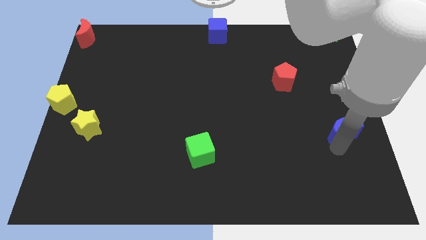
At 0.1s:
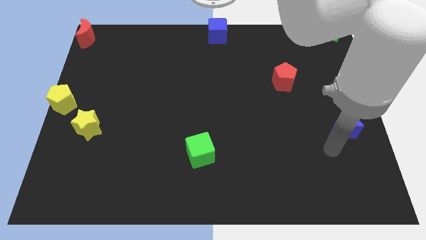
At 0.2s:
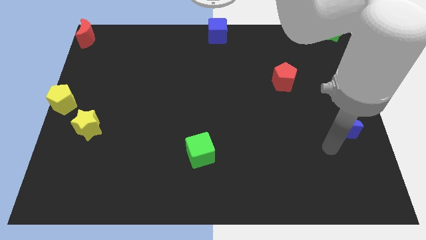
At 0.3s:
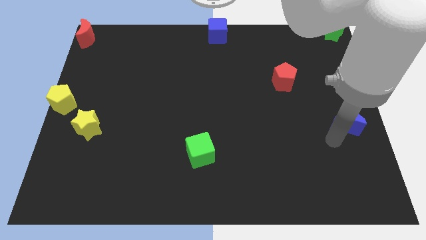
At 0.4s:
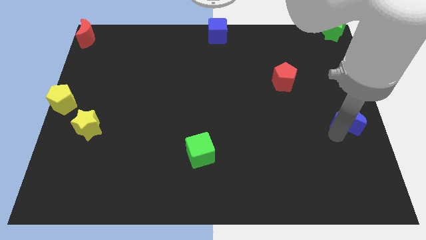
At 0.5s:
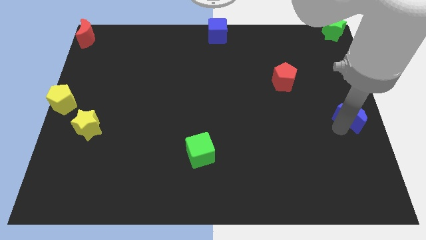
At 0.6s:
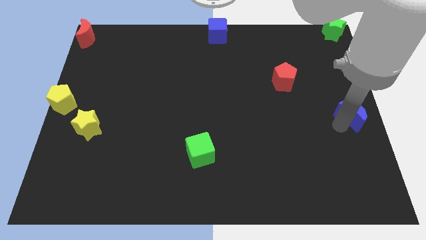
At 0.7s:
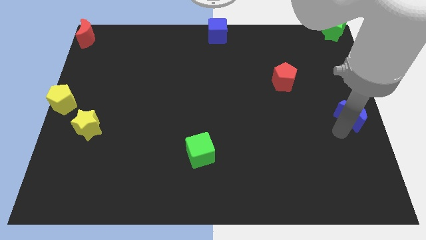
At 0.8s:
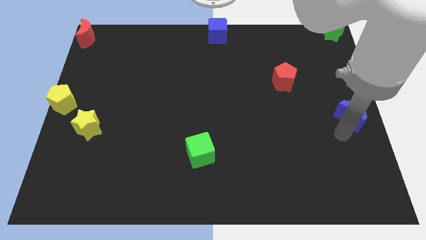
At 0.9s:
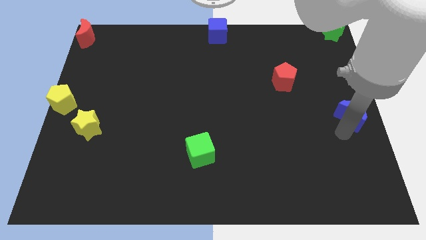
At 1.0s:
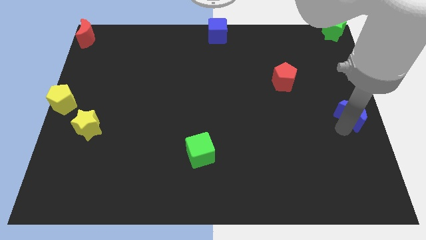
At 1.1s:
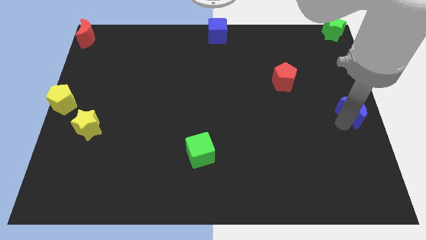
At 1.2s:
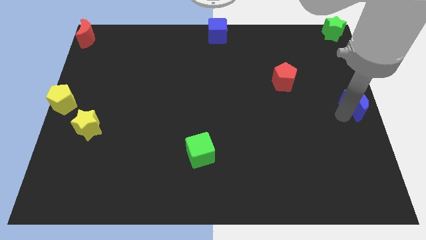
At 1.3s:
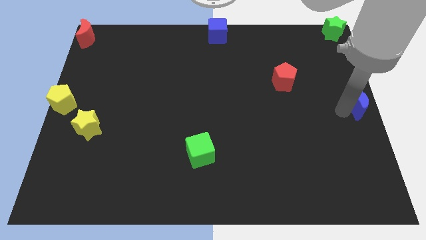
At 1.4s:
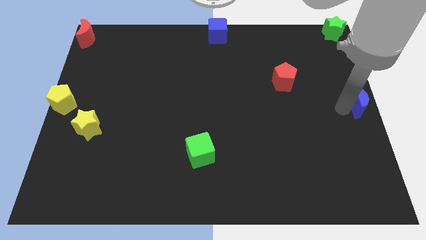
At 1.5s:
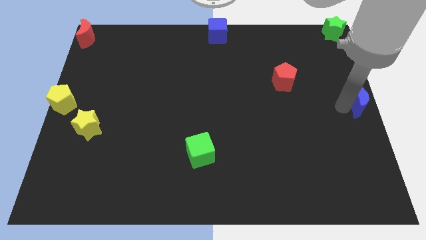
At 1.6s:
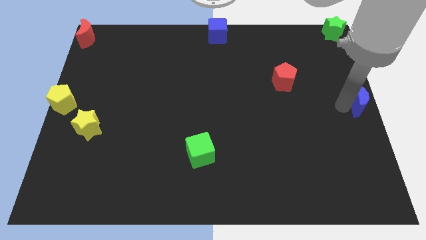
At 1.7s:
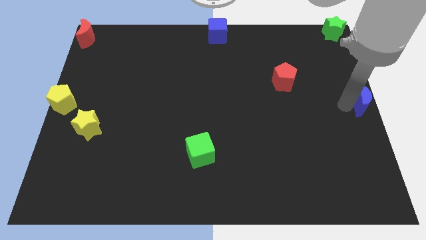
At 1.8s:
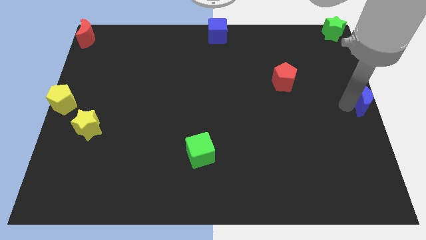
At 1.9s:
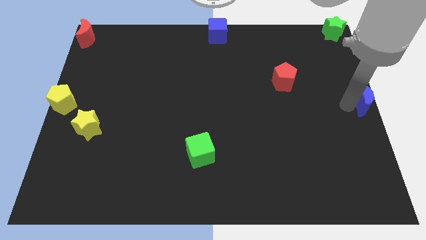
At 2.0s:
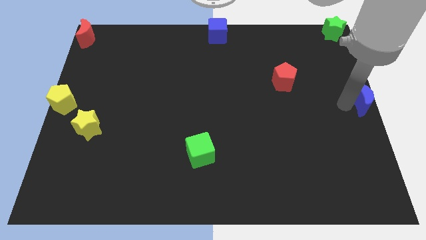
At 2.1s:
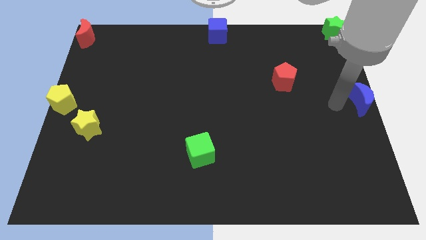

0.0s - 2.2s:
move the blue crescent to the center right side of the board

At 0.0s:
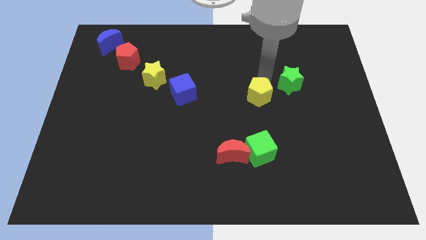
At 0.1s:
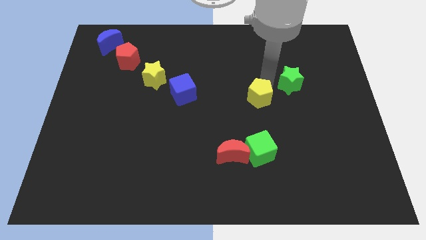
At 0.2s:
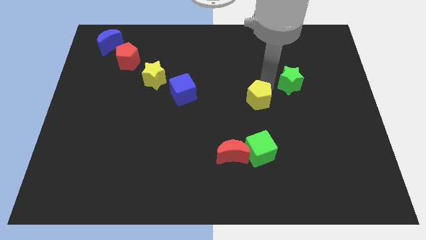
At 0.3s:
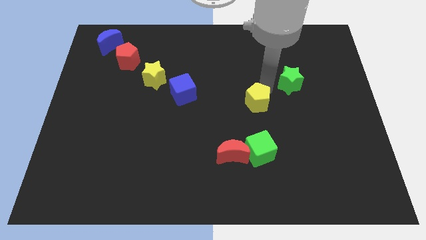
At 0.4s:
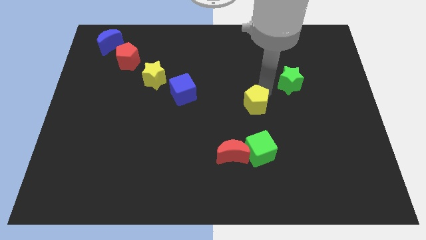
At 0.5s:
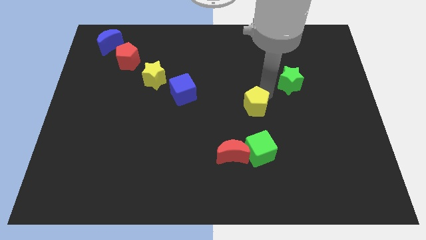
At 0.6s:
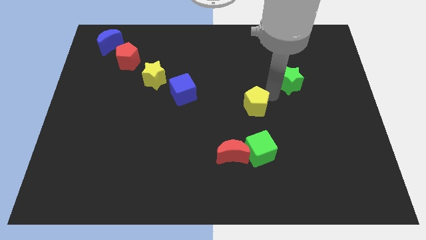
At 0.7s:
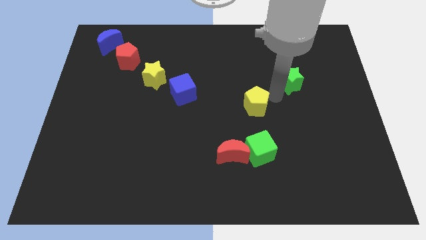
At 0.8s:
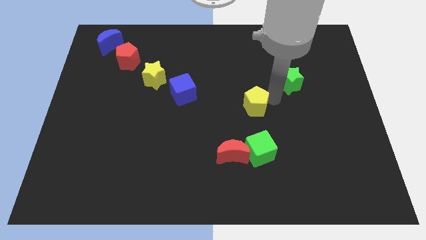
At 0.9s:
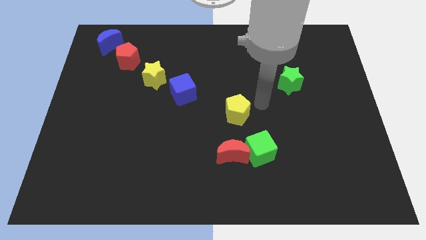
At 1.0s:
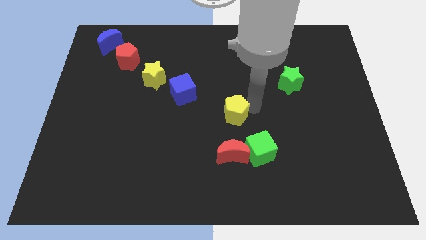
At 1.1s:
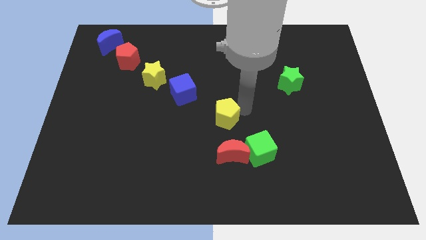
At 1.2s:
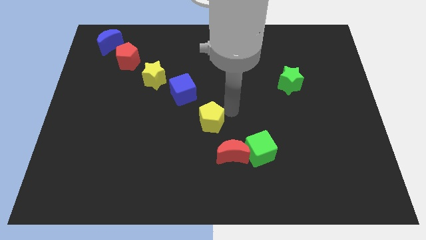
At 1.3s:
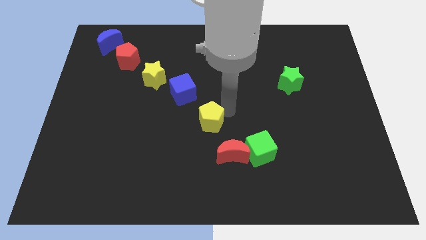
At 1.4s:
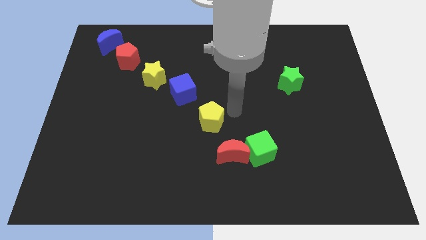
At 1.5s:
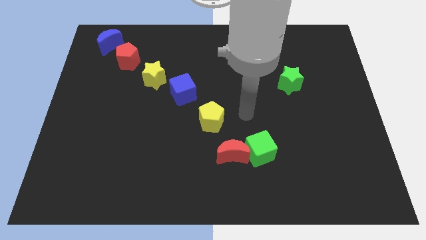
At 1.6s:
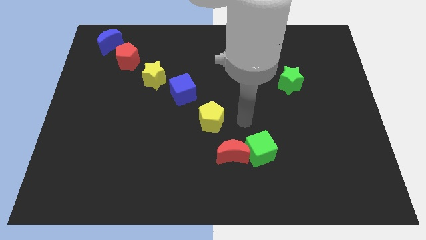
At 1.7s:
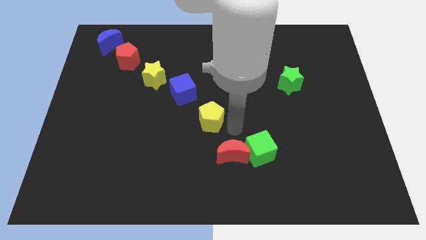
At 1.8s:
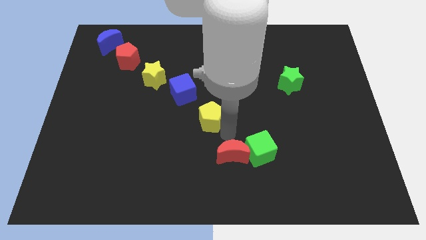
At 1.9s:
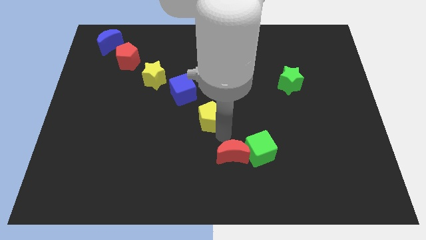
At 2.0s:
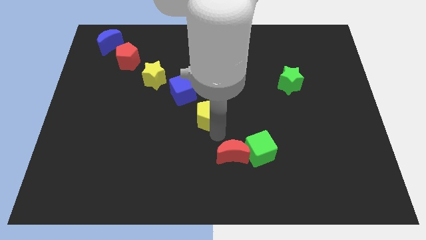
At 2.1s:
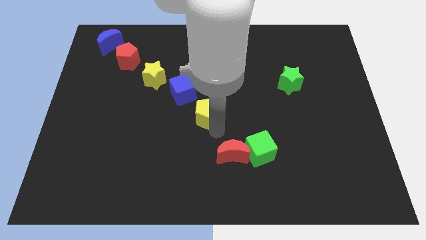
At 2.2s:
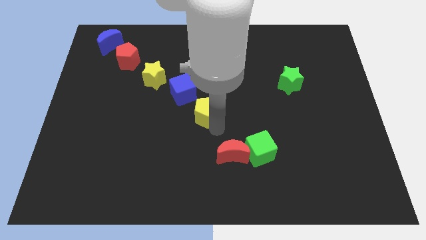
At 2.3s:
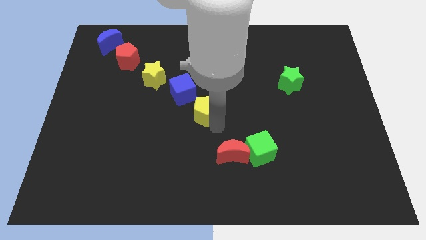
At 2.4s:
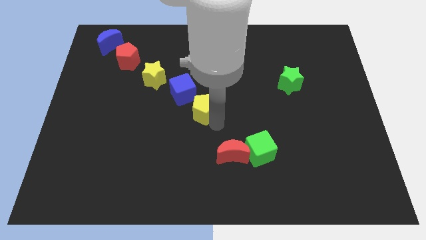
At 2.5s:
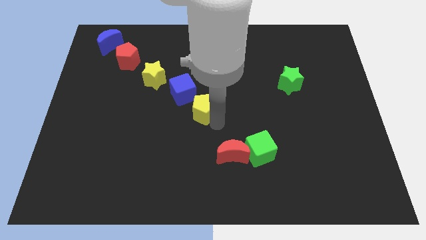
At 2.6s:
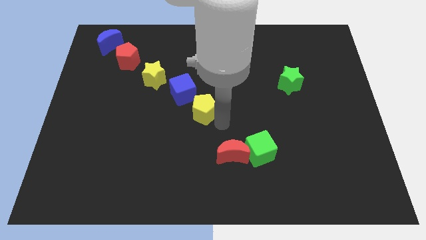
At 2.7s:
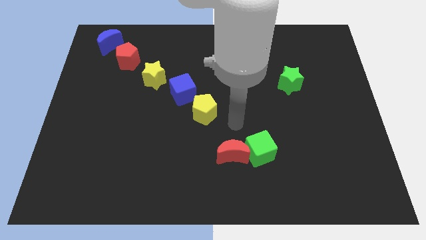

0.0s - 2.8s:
push the yellow pentagon close to the blue cube

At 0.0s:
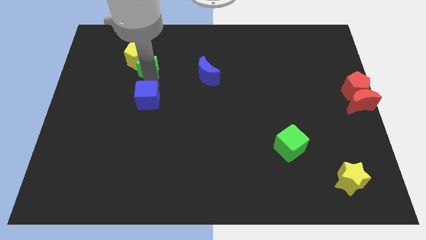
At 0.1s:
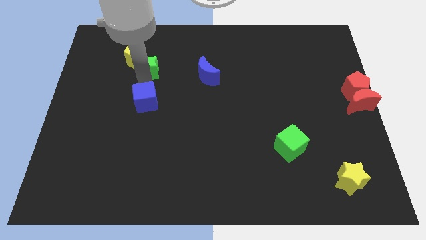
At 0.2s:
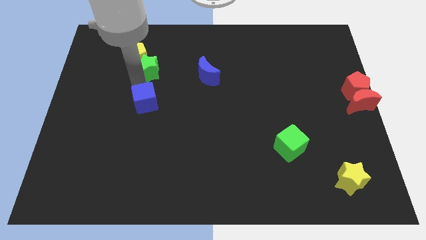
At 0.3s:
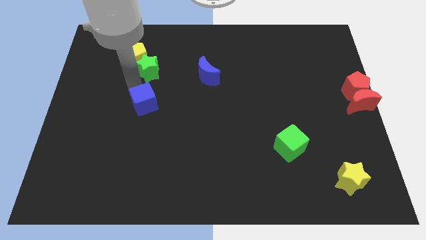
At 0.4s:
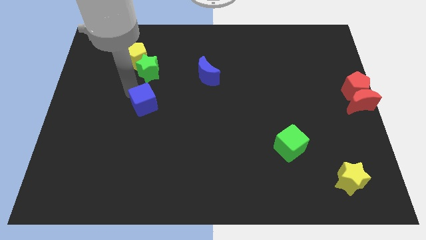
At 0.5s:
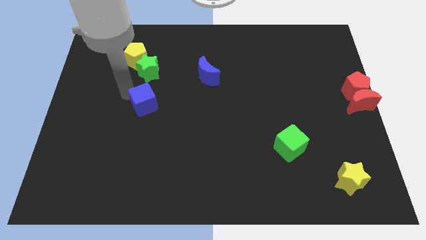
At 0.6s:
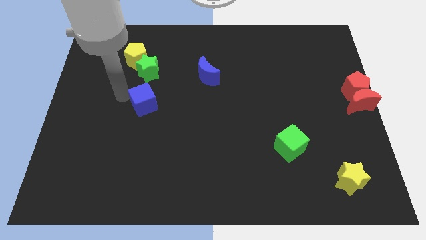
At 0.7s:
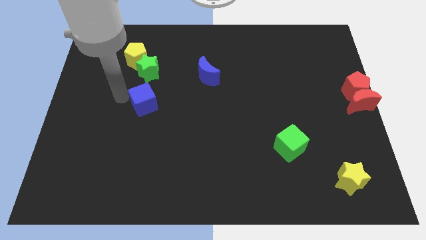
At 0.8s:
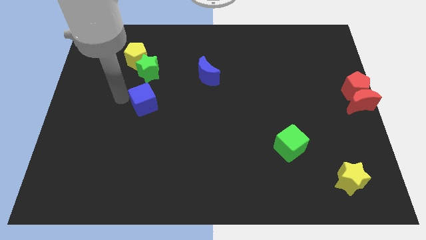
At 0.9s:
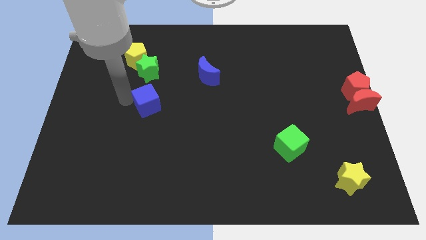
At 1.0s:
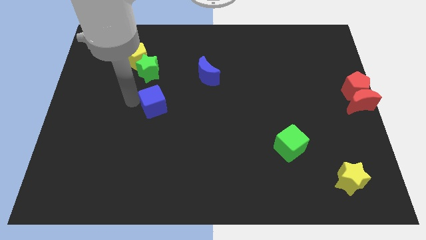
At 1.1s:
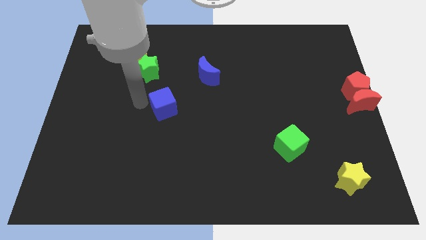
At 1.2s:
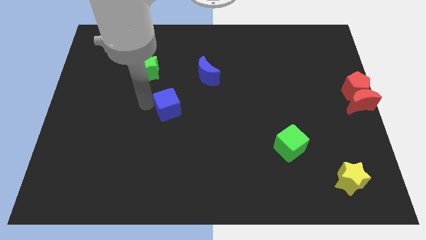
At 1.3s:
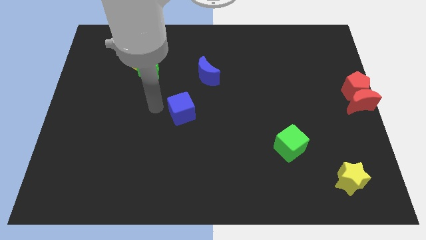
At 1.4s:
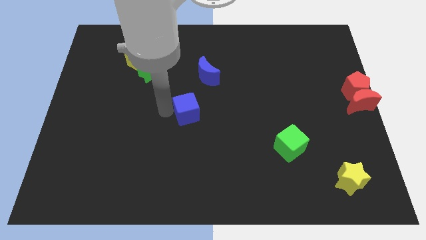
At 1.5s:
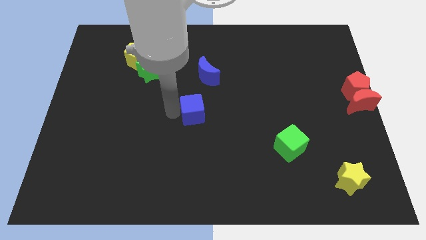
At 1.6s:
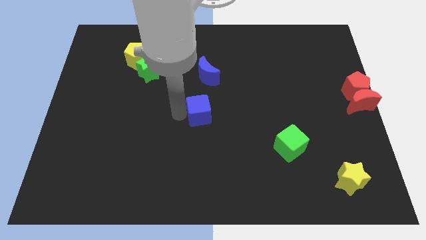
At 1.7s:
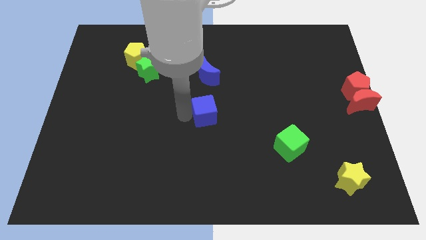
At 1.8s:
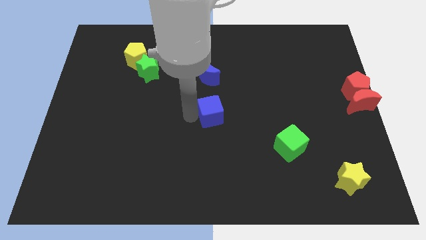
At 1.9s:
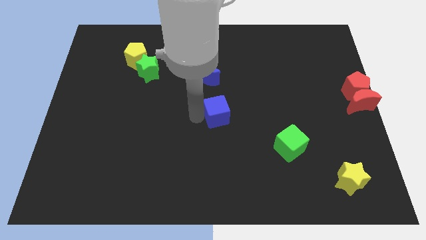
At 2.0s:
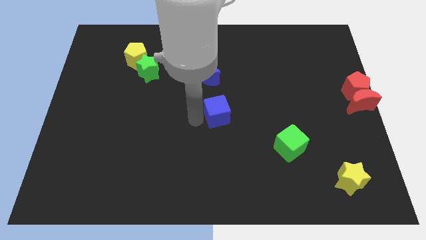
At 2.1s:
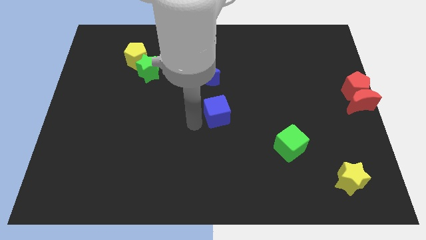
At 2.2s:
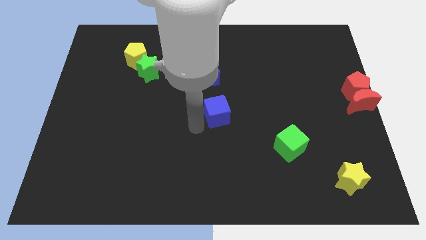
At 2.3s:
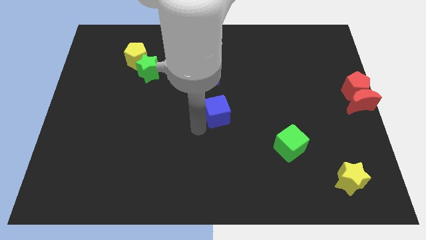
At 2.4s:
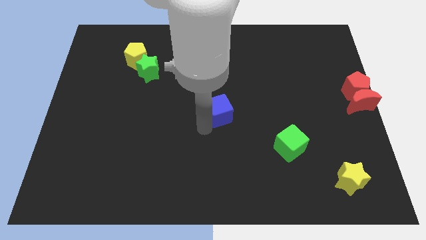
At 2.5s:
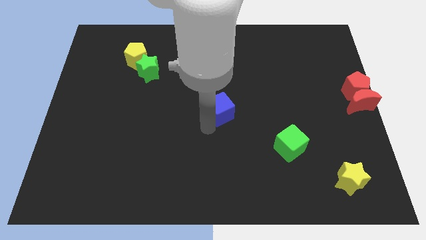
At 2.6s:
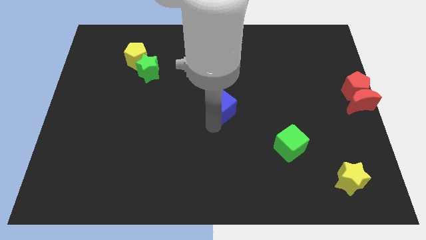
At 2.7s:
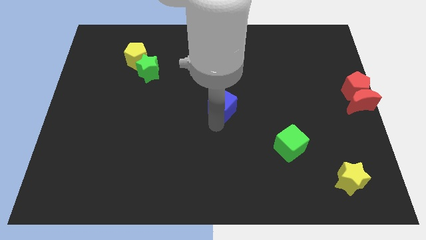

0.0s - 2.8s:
place the blue cube diagonally to green cube

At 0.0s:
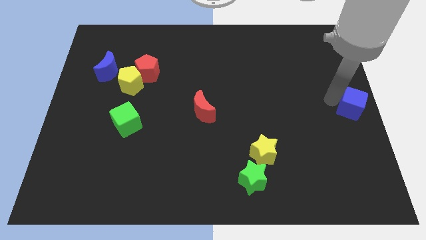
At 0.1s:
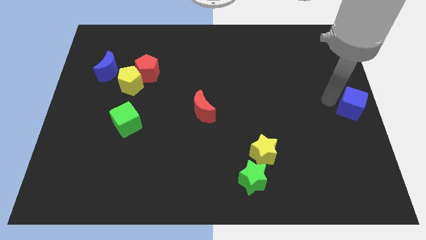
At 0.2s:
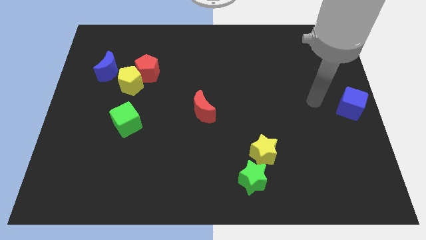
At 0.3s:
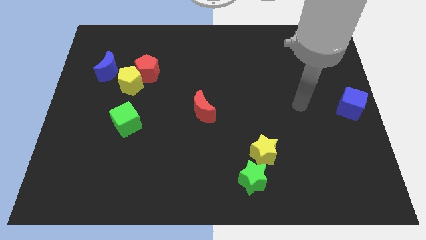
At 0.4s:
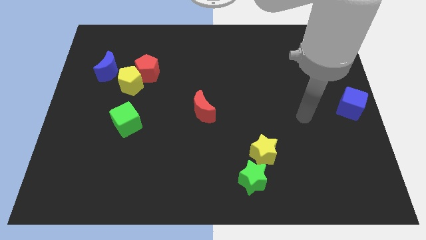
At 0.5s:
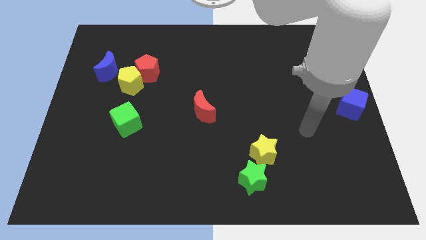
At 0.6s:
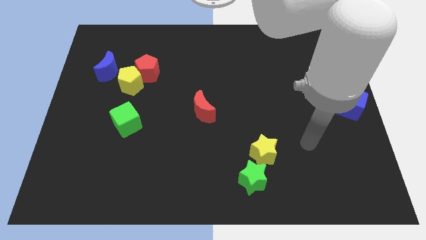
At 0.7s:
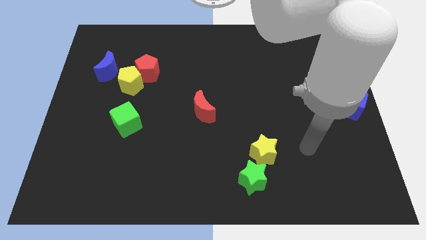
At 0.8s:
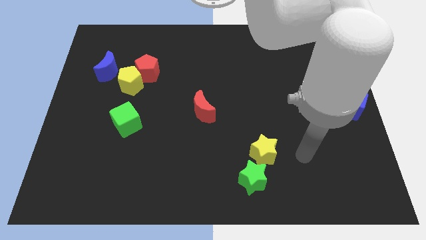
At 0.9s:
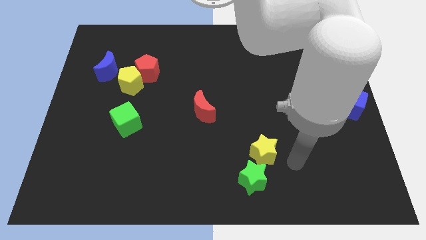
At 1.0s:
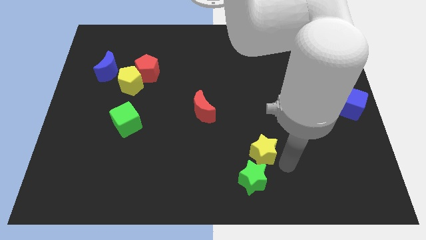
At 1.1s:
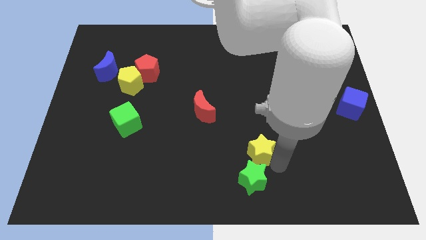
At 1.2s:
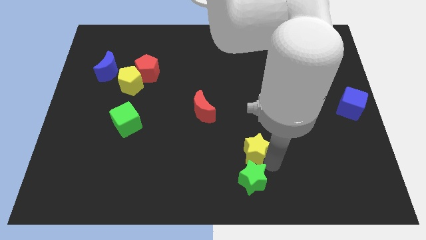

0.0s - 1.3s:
move your arm away from the blue cube
